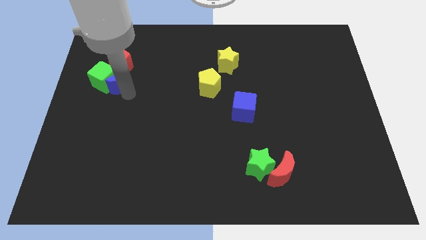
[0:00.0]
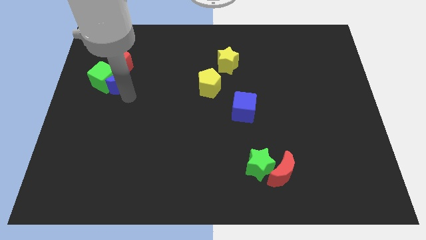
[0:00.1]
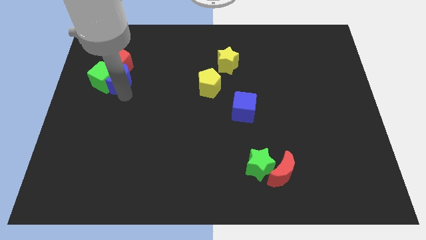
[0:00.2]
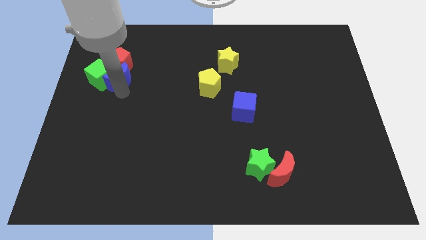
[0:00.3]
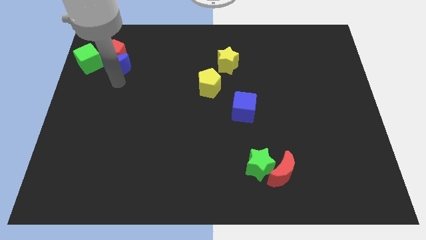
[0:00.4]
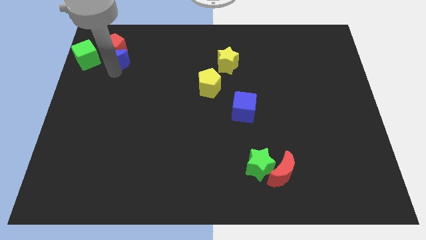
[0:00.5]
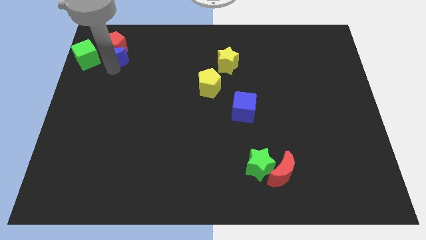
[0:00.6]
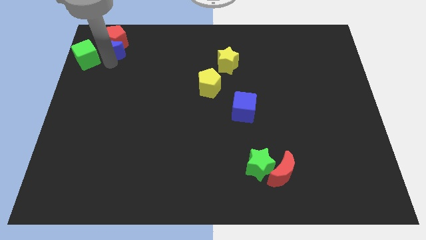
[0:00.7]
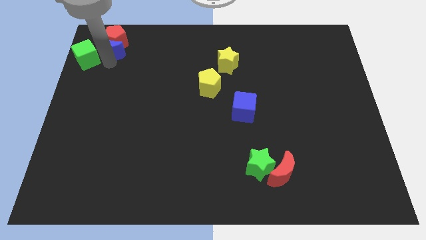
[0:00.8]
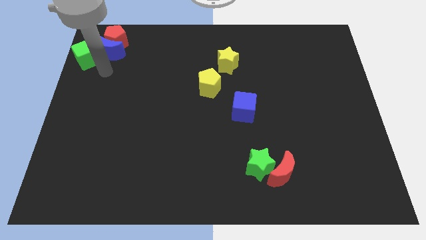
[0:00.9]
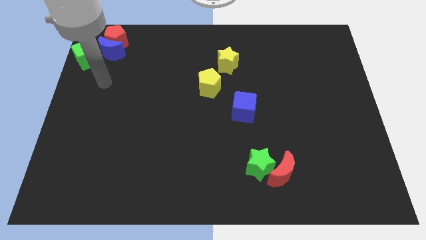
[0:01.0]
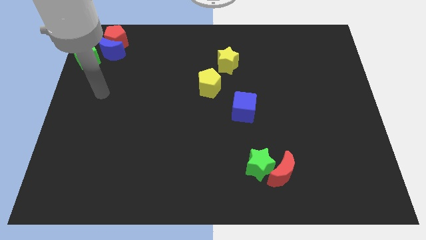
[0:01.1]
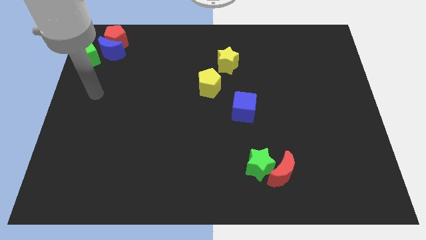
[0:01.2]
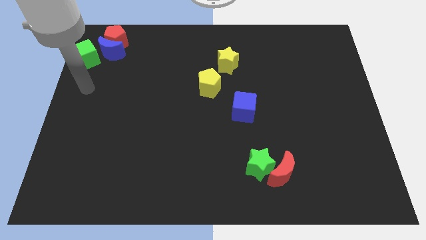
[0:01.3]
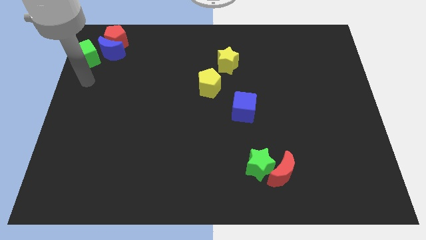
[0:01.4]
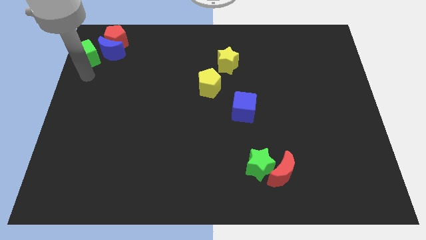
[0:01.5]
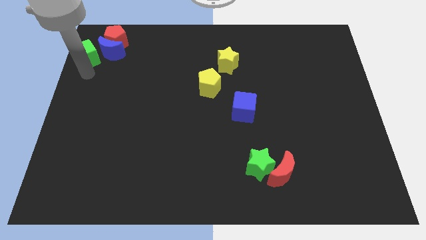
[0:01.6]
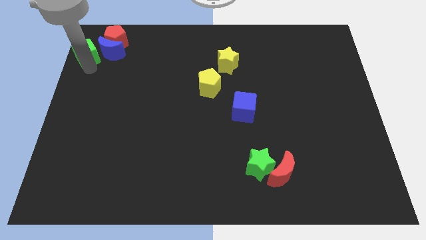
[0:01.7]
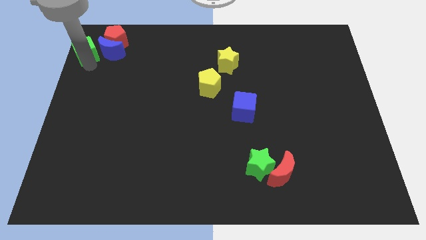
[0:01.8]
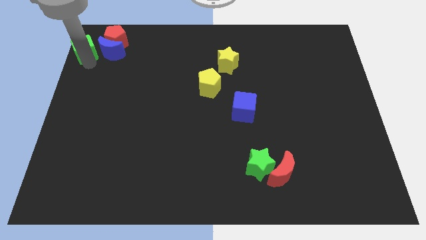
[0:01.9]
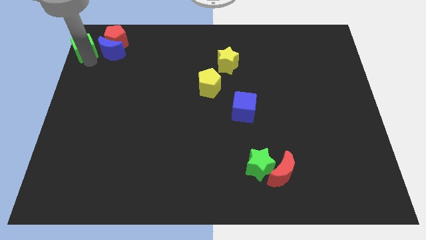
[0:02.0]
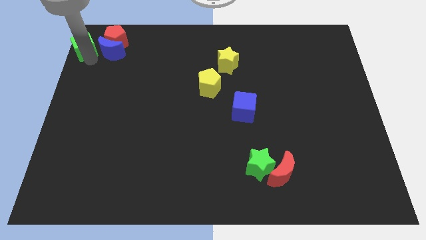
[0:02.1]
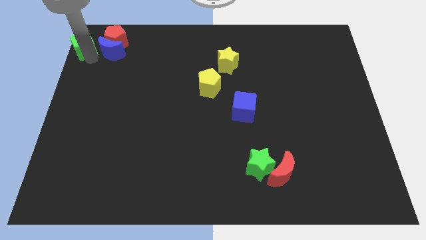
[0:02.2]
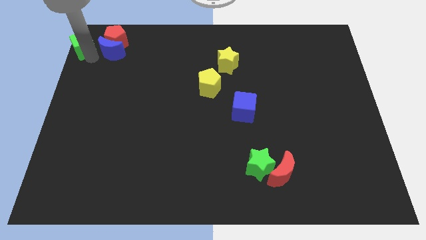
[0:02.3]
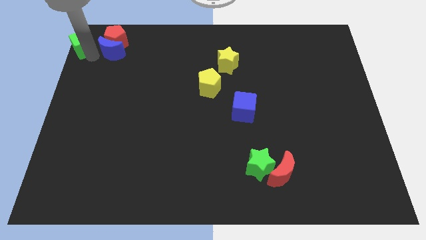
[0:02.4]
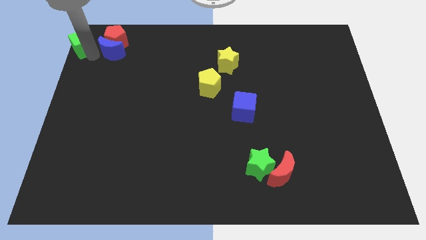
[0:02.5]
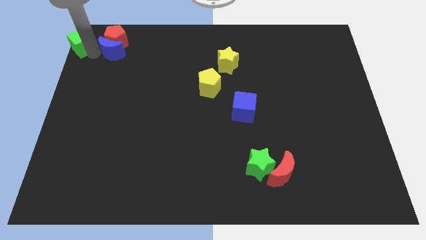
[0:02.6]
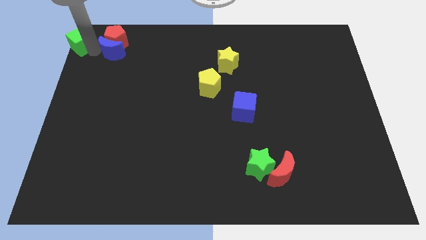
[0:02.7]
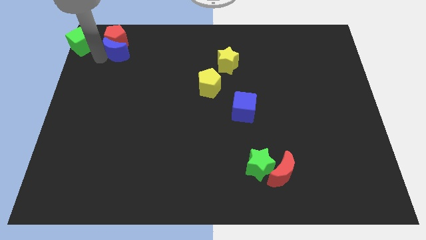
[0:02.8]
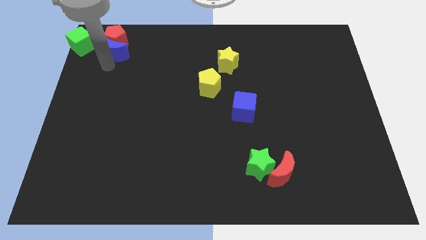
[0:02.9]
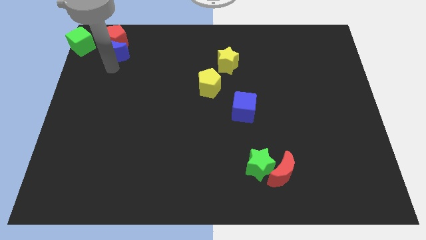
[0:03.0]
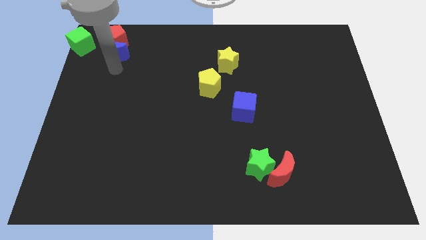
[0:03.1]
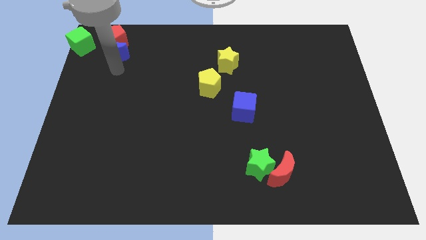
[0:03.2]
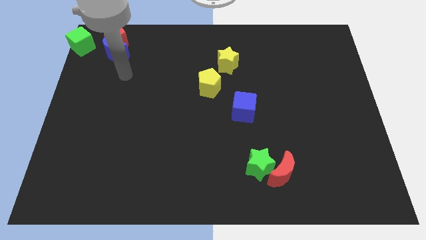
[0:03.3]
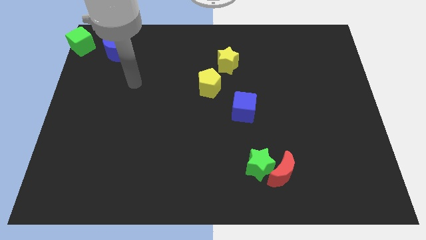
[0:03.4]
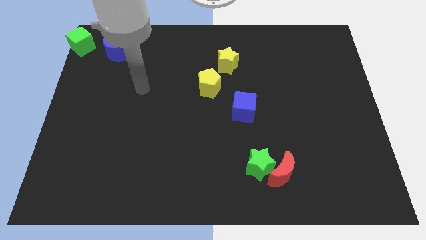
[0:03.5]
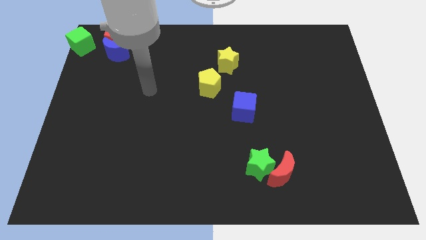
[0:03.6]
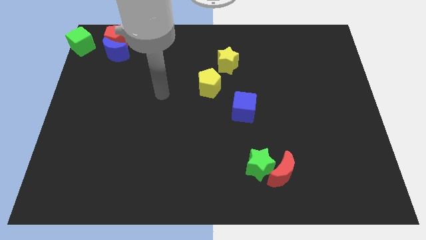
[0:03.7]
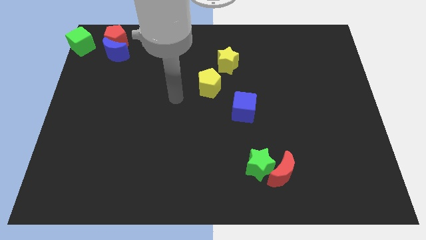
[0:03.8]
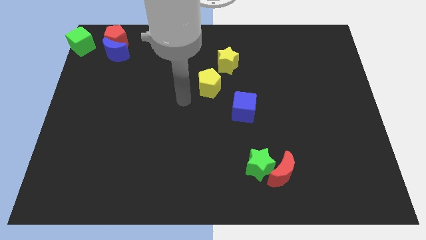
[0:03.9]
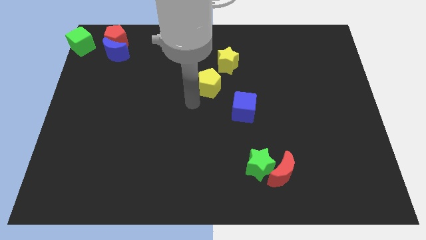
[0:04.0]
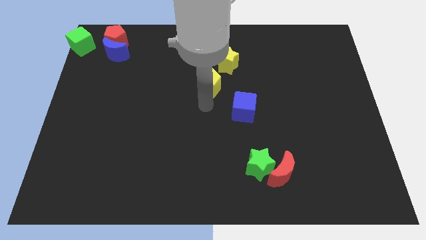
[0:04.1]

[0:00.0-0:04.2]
push the green cube to the top left side of the board

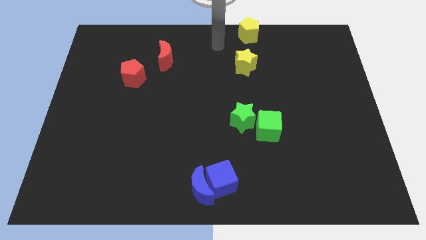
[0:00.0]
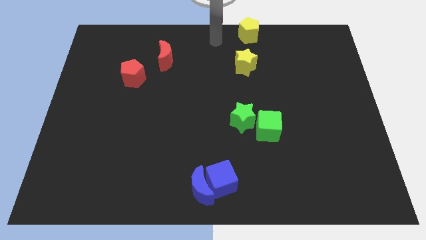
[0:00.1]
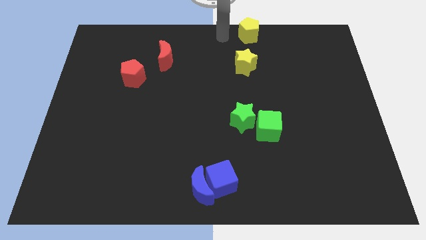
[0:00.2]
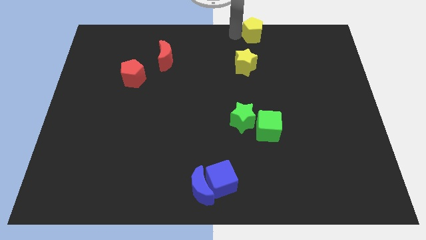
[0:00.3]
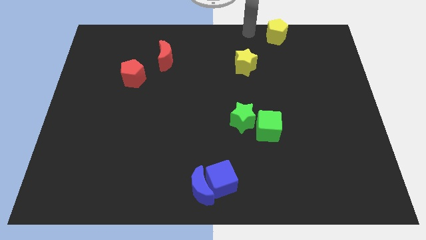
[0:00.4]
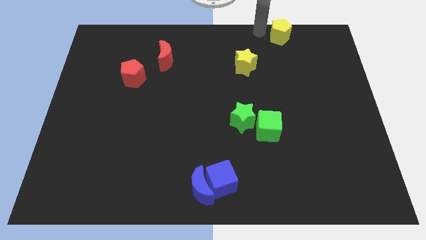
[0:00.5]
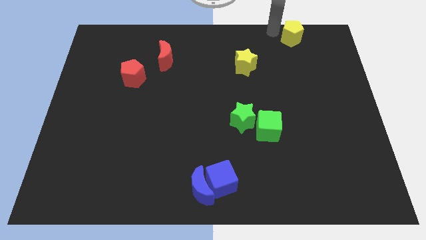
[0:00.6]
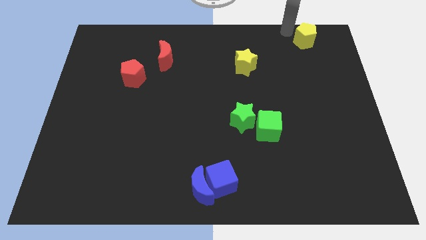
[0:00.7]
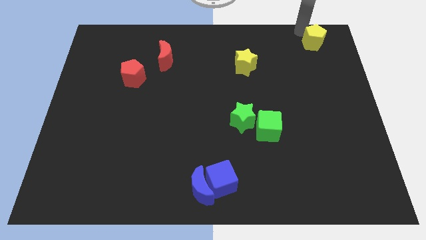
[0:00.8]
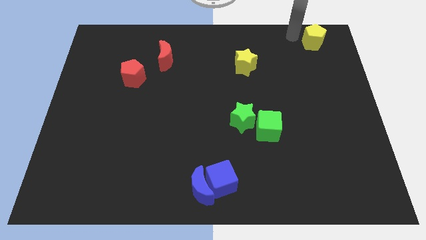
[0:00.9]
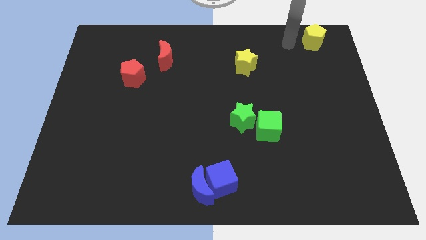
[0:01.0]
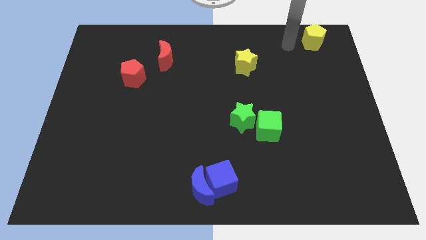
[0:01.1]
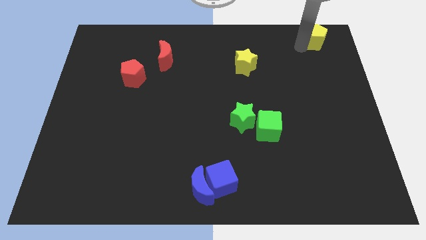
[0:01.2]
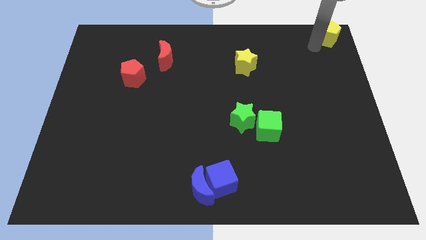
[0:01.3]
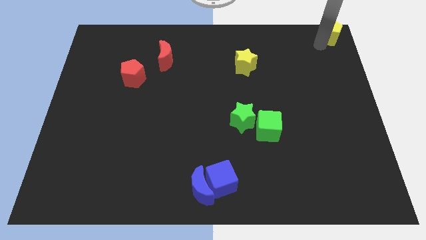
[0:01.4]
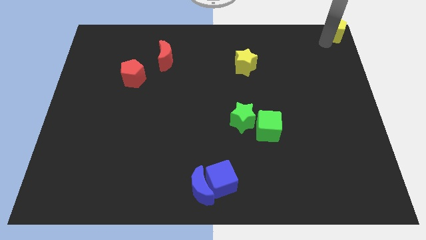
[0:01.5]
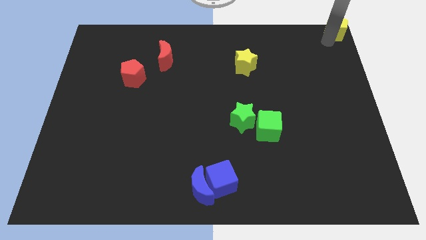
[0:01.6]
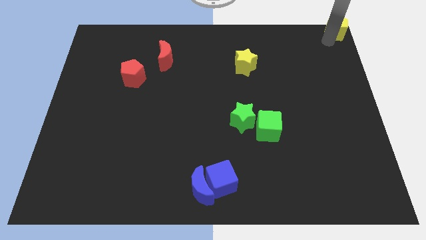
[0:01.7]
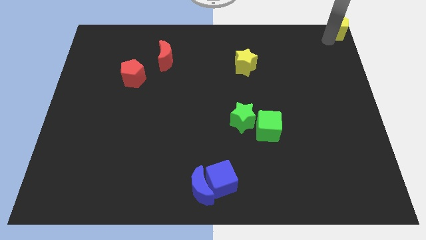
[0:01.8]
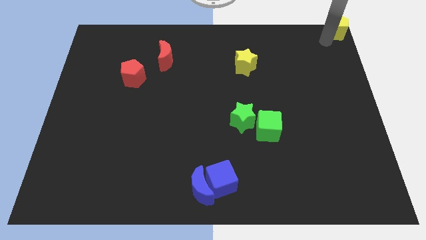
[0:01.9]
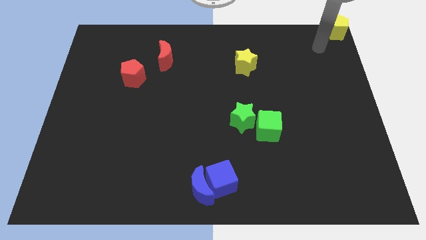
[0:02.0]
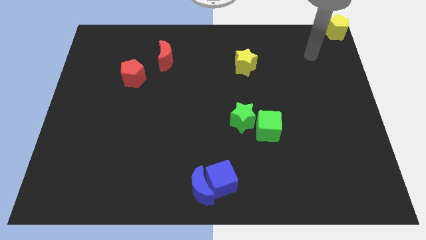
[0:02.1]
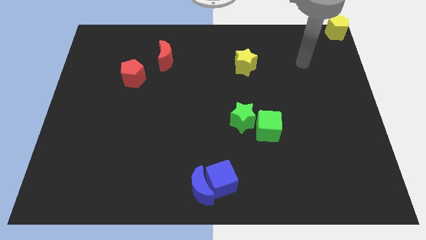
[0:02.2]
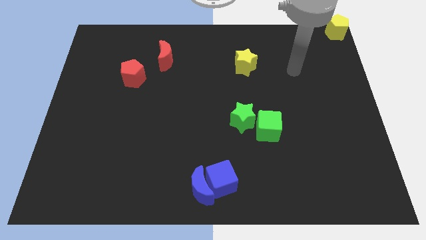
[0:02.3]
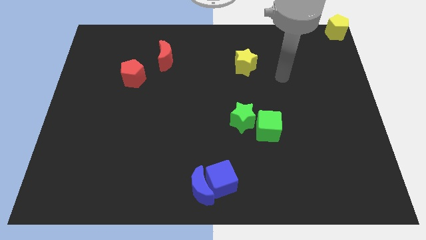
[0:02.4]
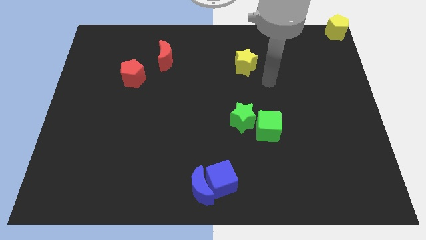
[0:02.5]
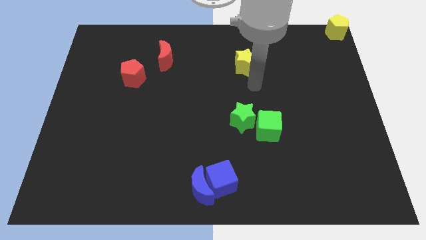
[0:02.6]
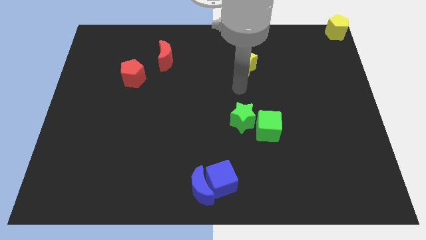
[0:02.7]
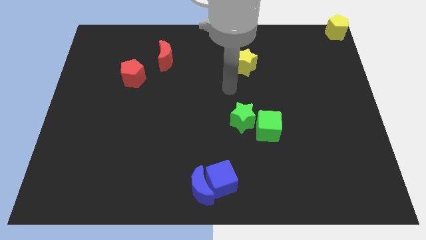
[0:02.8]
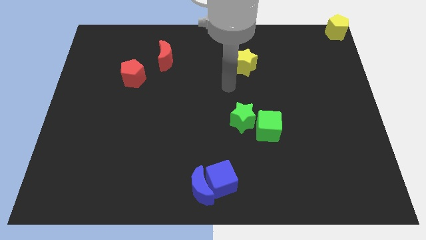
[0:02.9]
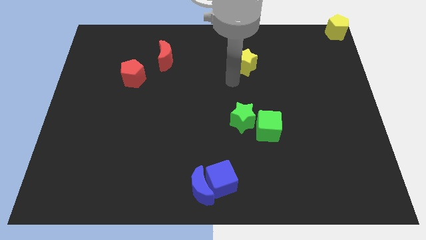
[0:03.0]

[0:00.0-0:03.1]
place the yellow pentagon to the top right

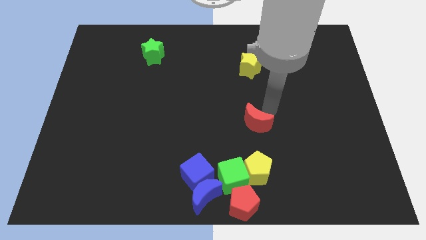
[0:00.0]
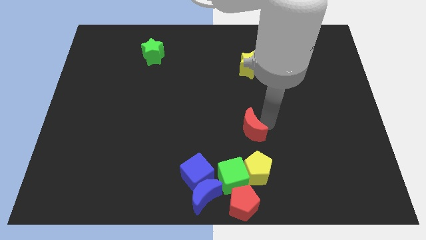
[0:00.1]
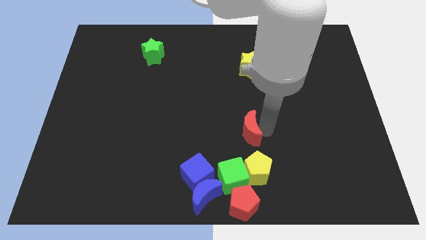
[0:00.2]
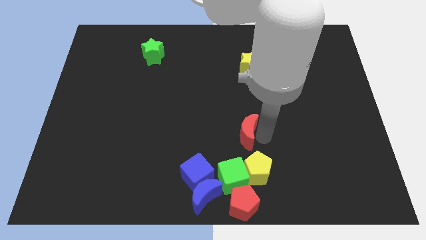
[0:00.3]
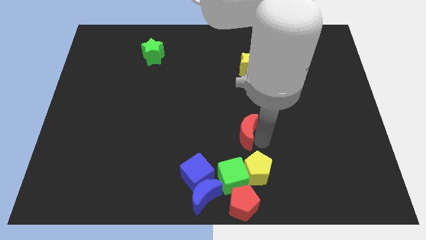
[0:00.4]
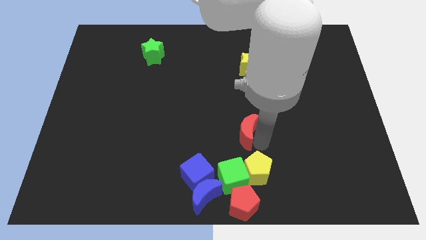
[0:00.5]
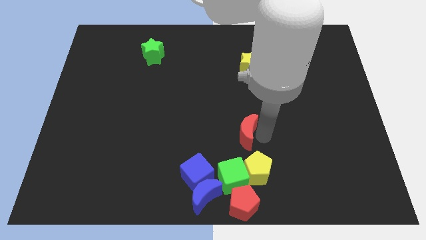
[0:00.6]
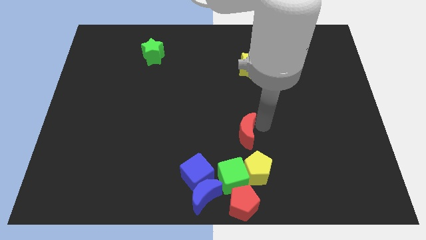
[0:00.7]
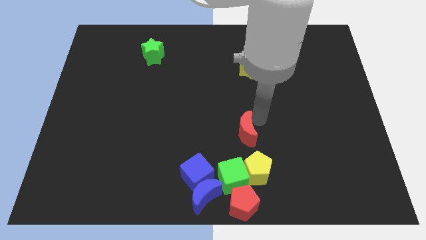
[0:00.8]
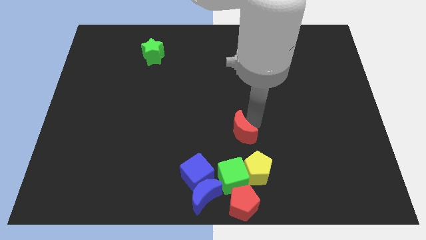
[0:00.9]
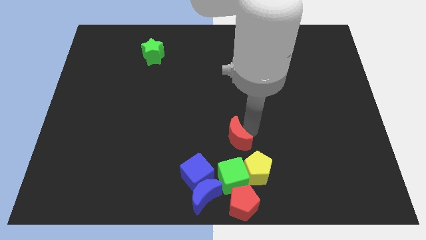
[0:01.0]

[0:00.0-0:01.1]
place the red crescent above the yellow pentagon

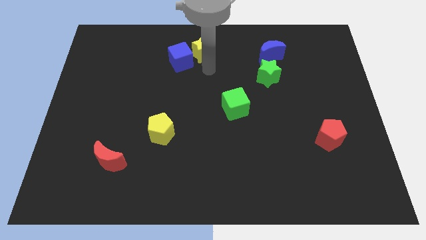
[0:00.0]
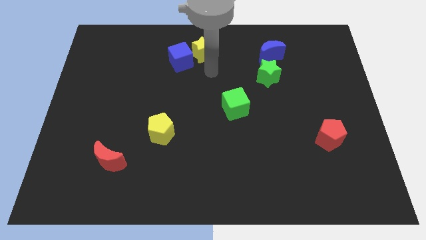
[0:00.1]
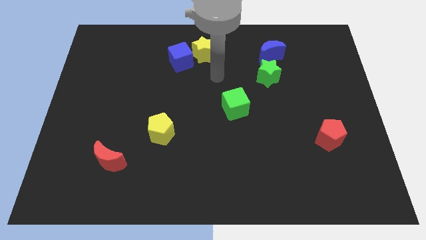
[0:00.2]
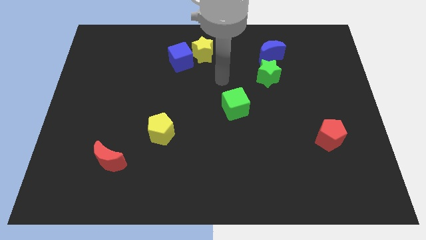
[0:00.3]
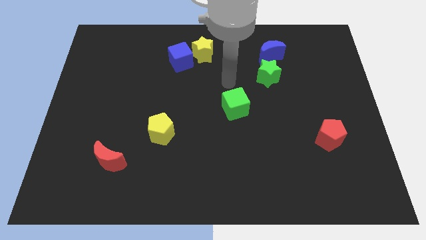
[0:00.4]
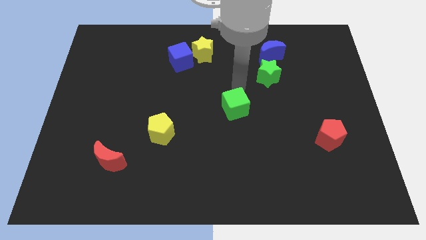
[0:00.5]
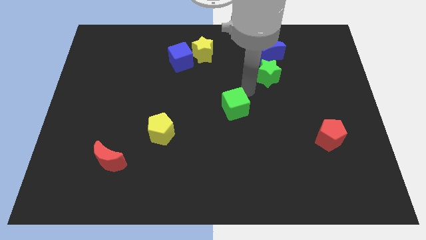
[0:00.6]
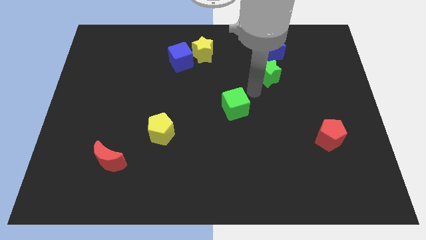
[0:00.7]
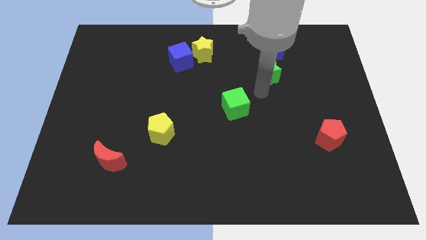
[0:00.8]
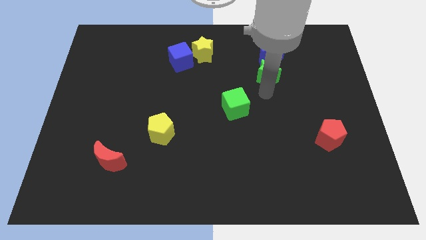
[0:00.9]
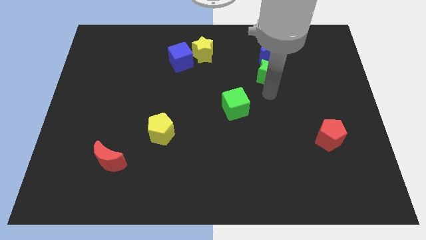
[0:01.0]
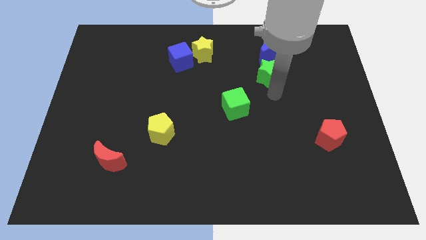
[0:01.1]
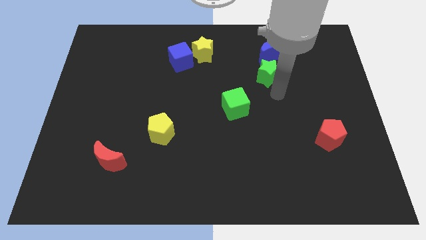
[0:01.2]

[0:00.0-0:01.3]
move your arm to the bottom of green star
